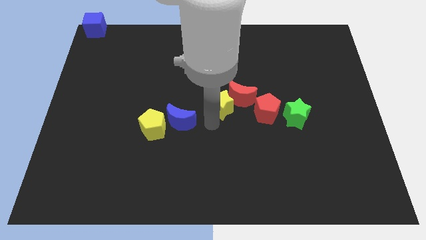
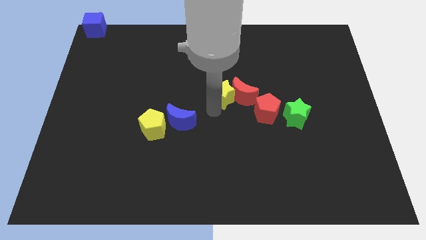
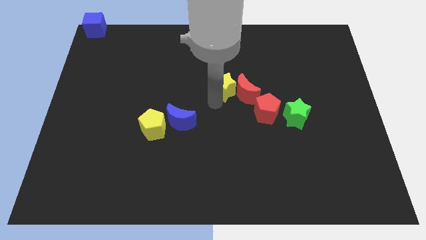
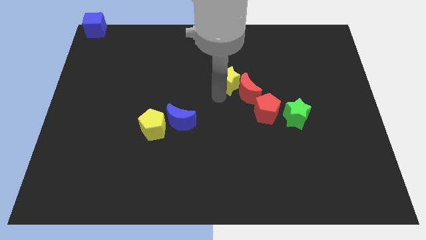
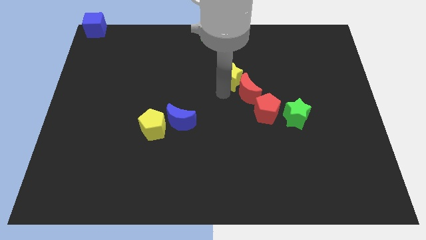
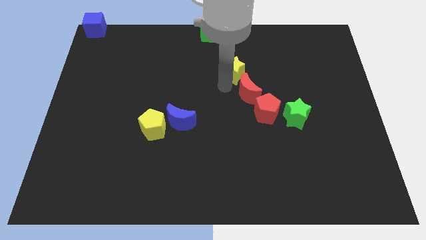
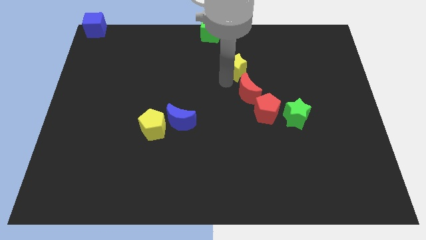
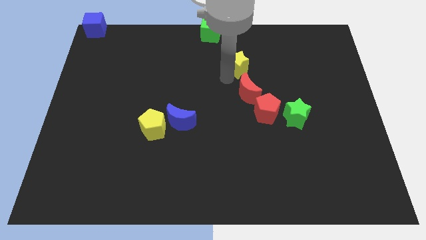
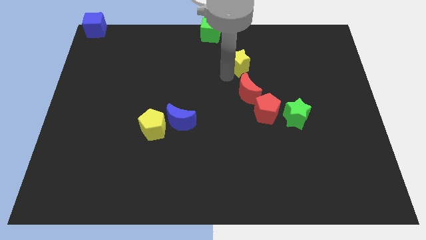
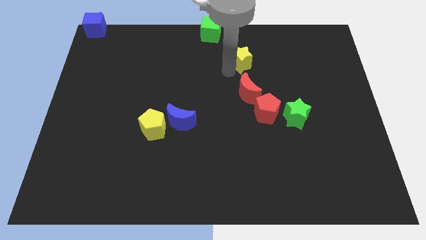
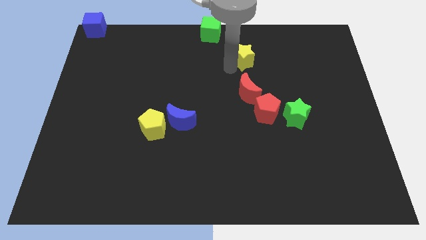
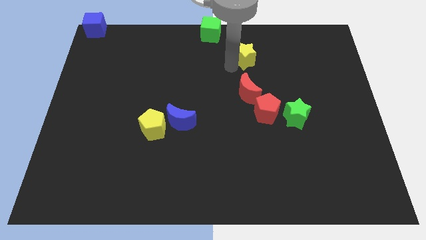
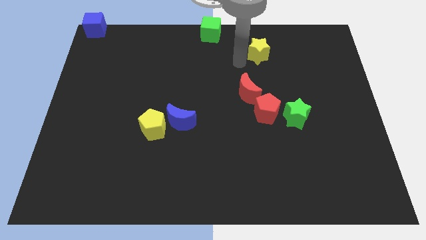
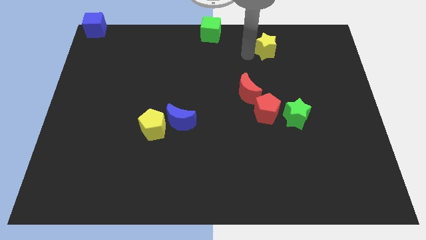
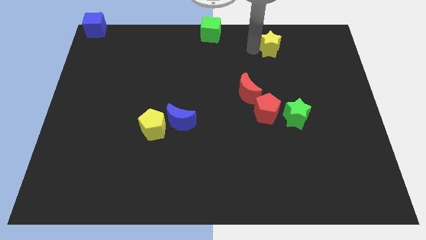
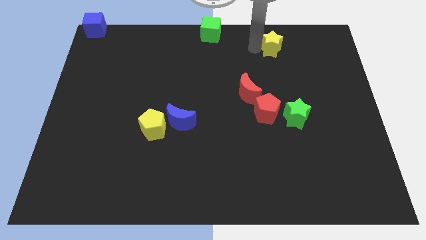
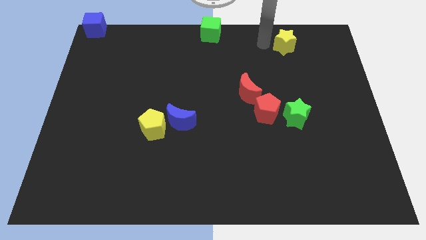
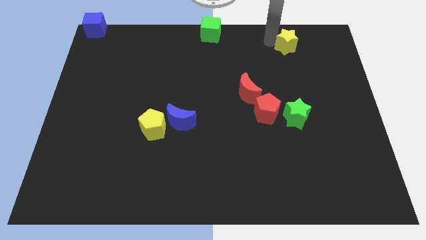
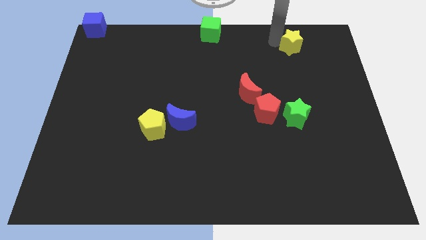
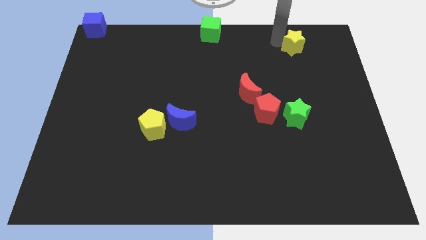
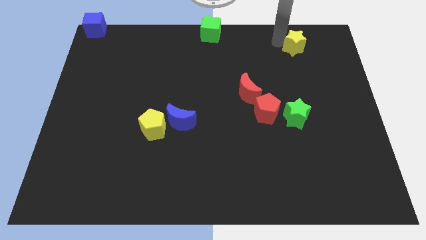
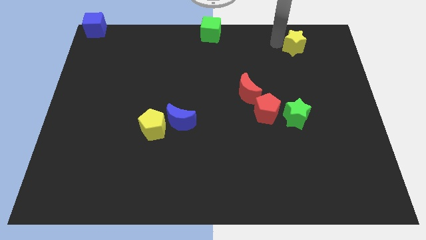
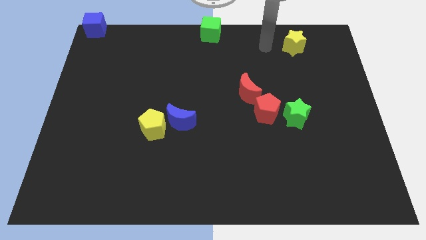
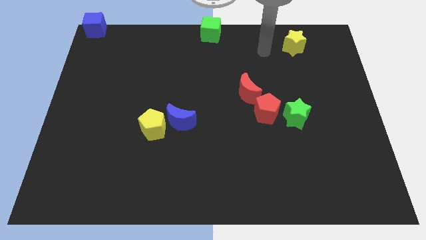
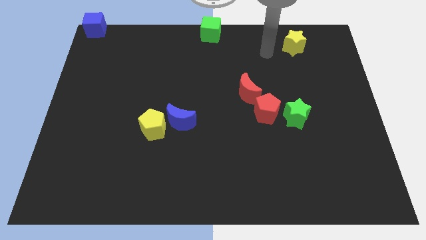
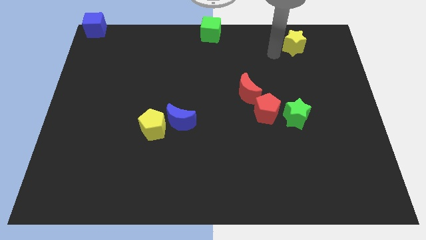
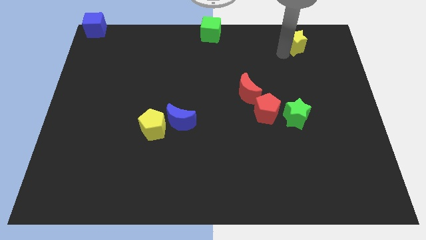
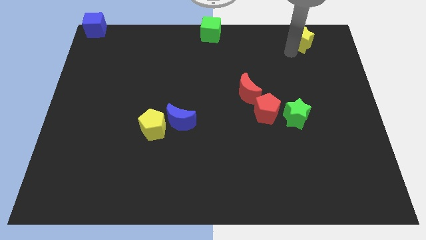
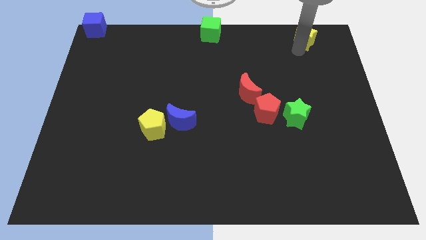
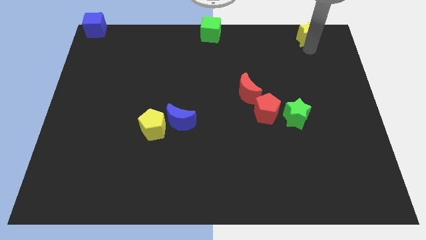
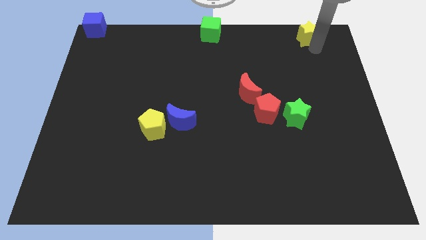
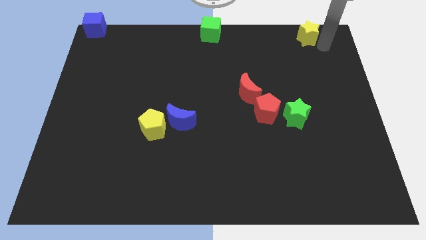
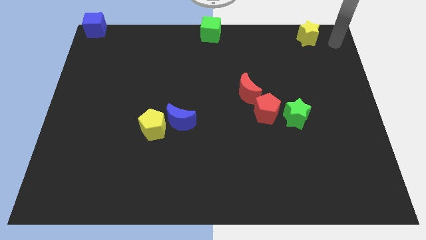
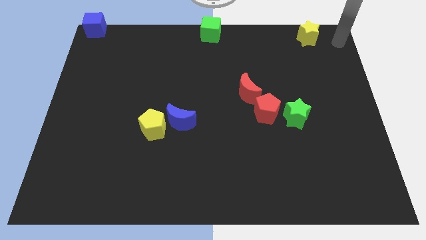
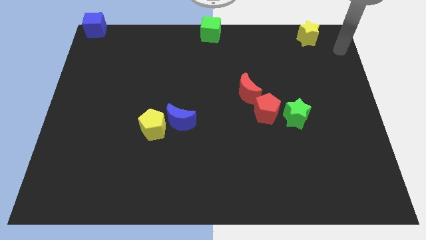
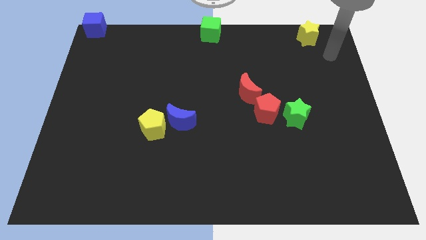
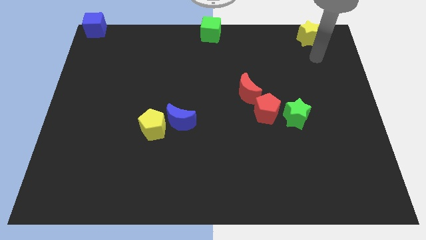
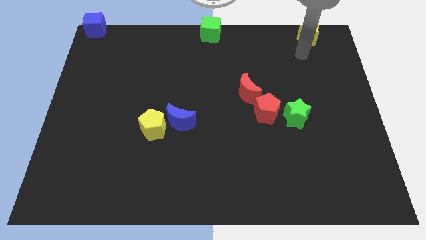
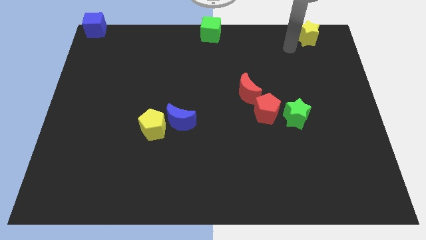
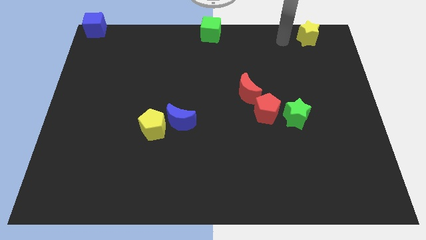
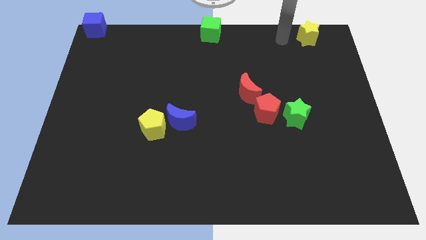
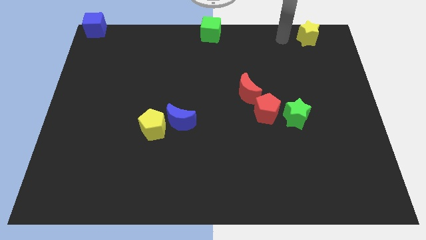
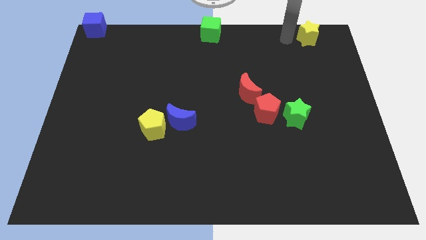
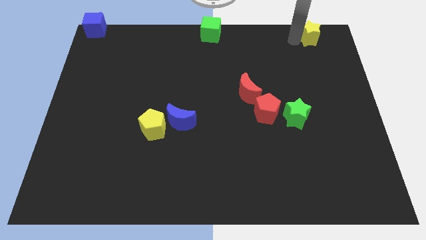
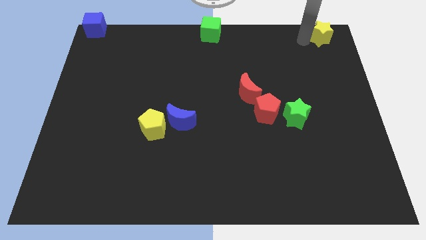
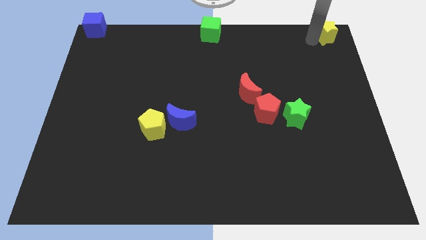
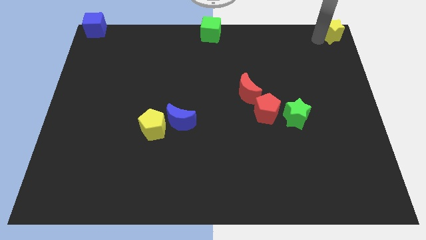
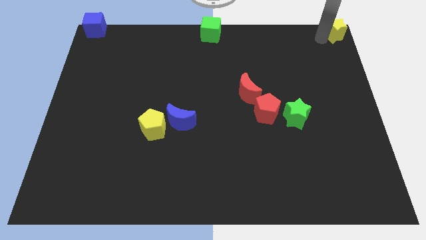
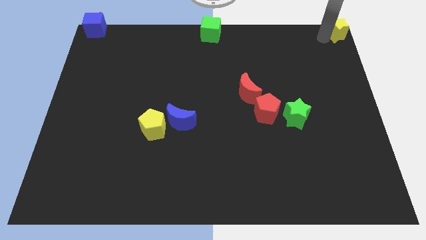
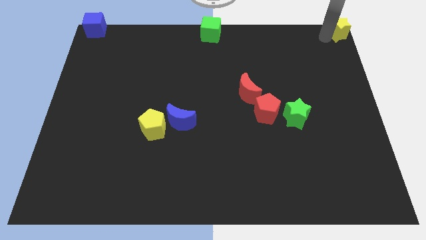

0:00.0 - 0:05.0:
push the yellow star to the top right corner

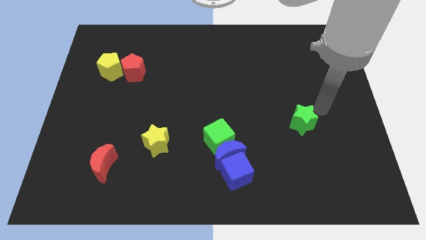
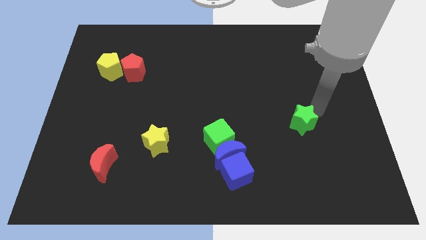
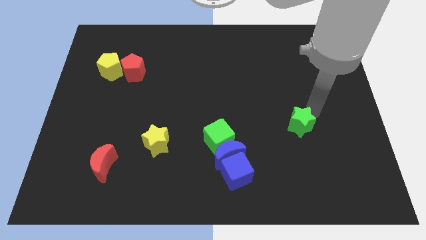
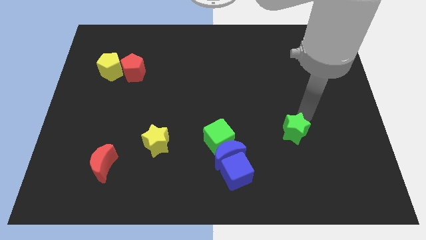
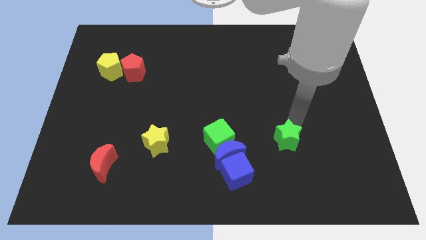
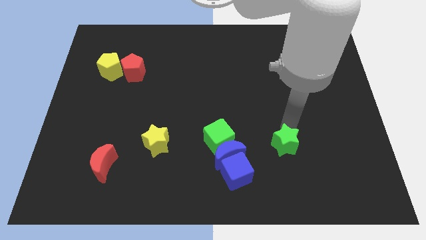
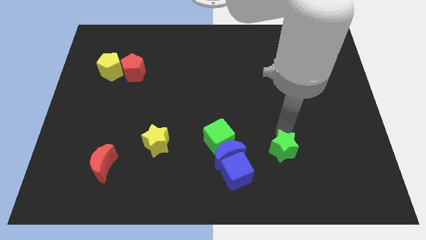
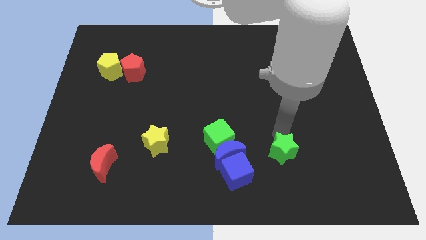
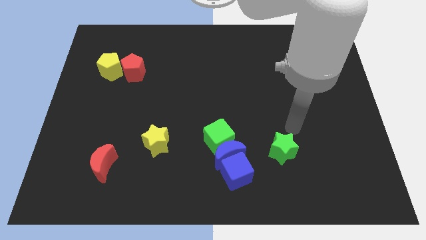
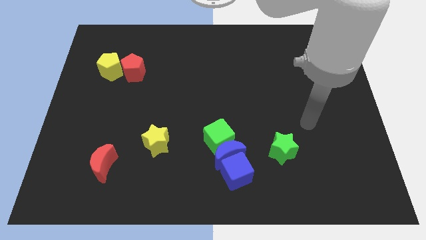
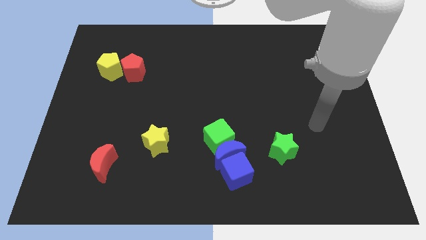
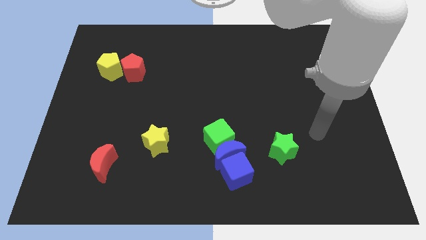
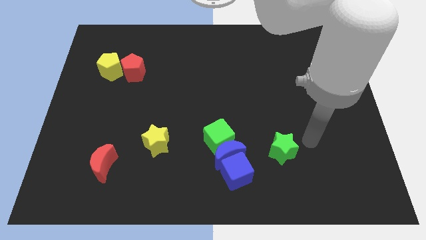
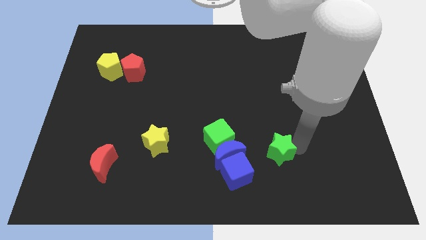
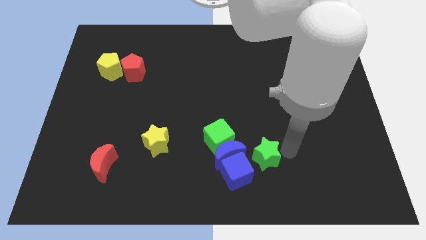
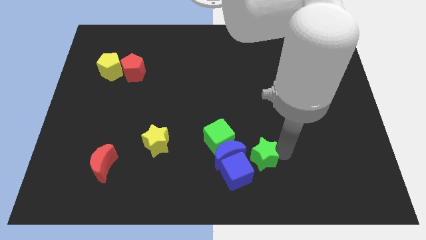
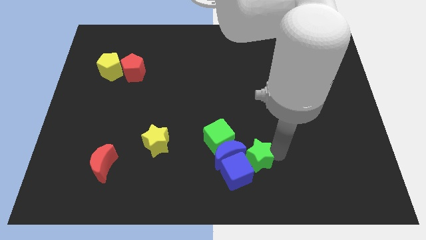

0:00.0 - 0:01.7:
push the green star into the blue cube

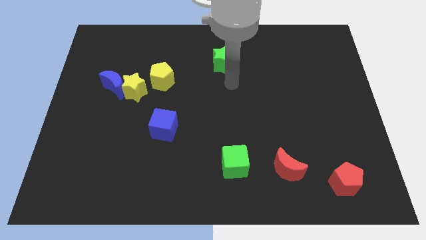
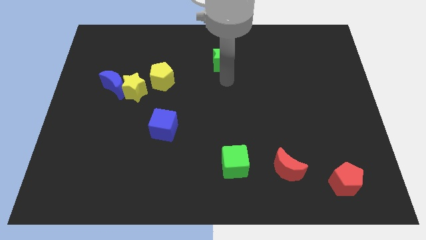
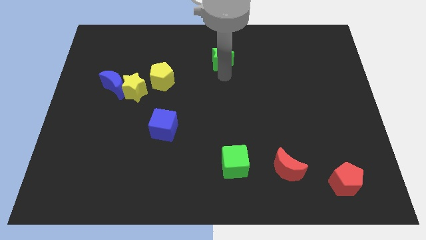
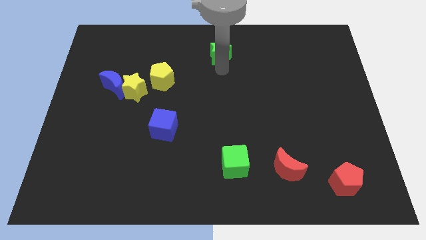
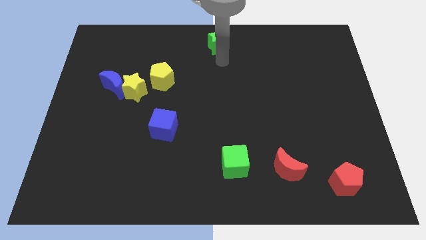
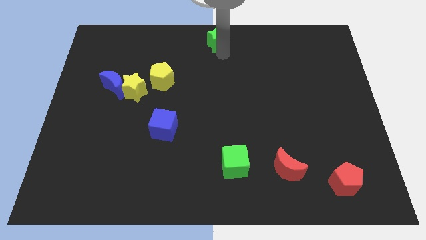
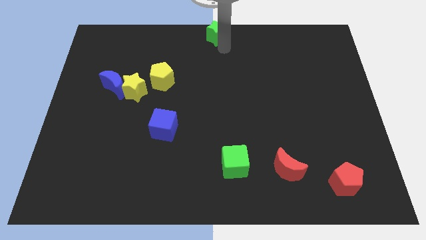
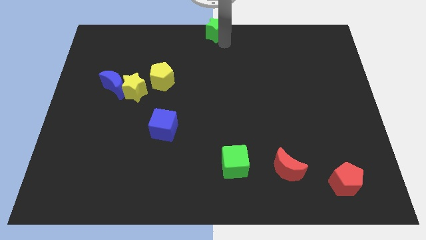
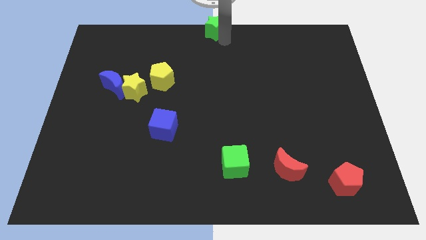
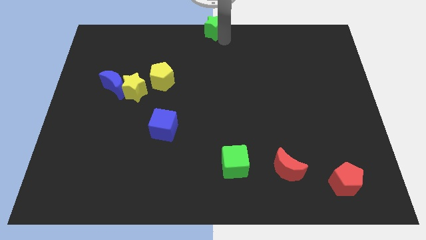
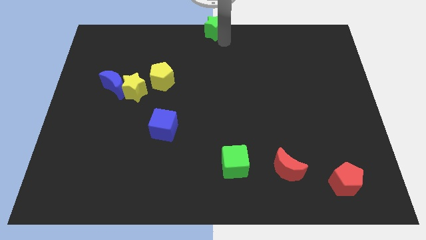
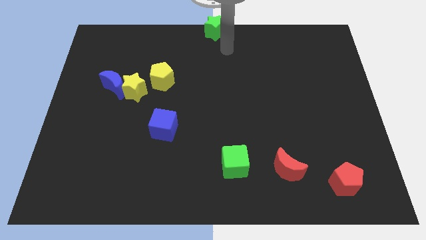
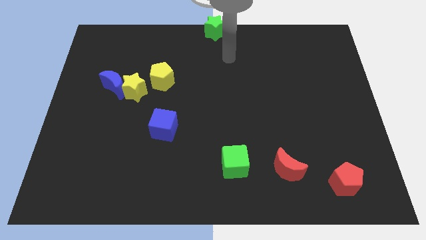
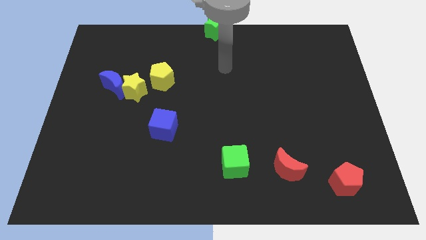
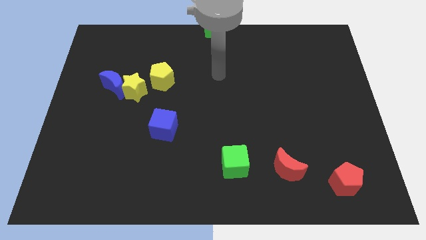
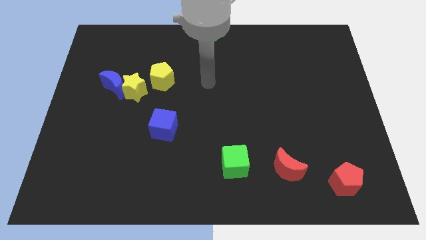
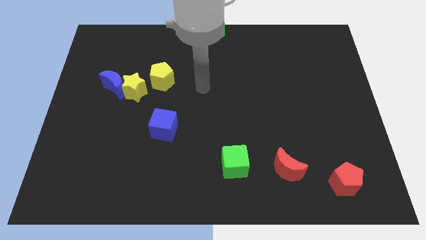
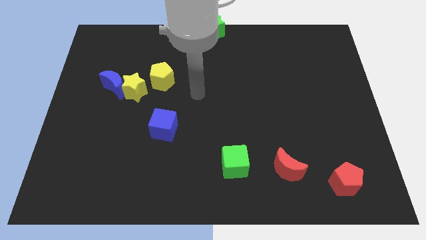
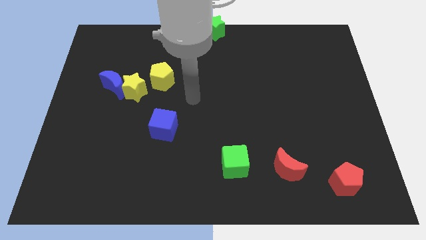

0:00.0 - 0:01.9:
place the green star at the top center of the board

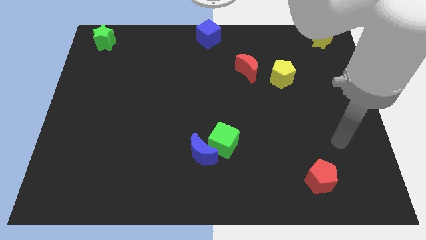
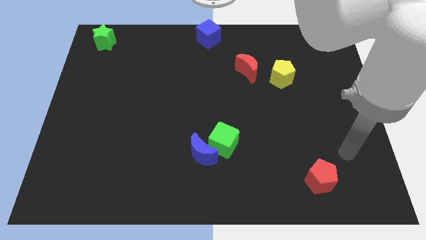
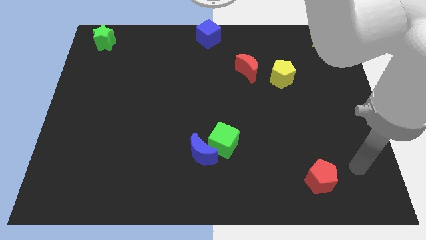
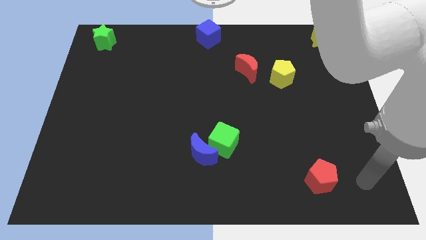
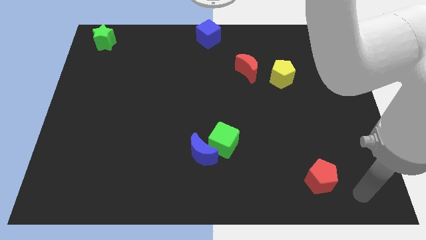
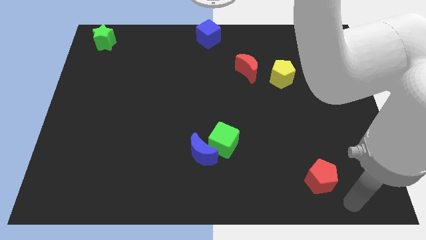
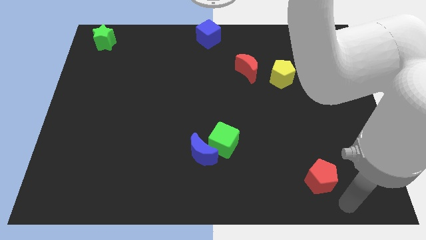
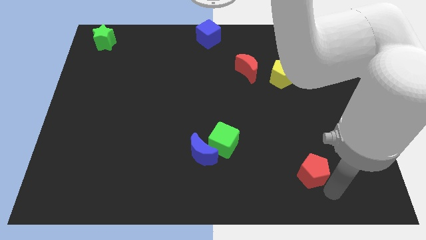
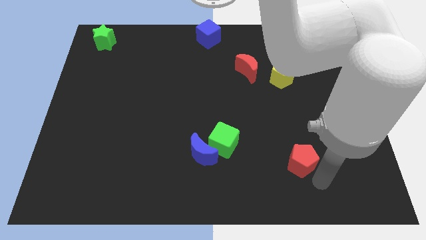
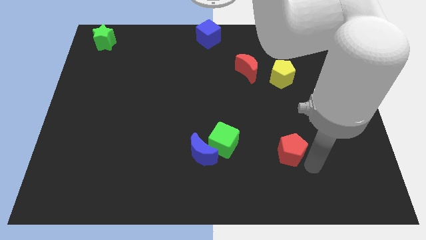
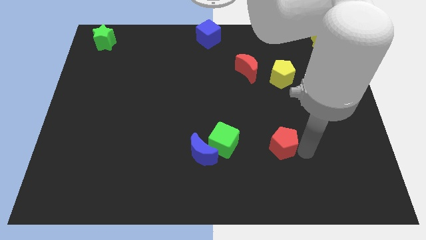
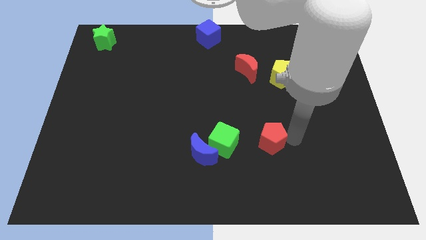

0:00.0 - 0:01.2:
move the red pentagon parallel right to the green cube
